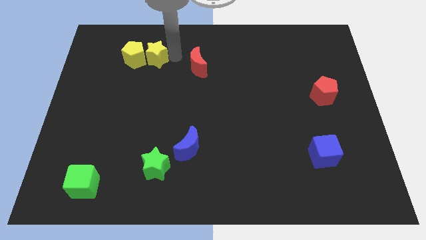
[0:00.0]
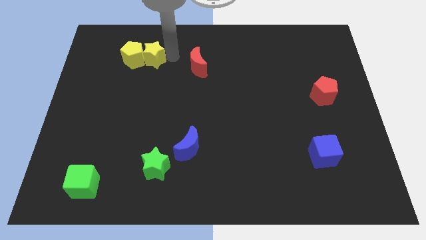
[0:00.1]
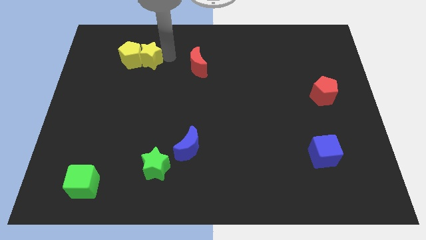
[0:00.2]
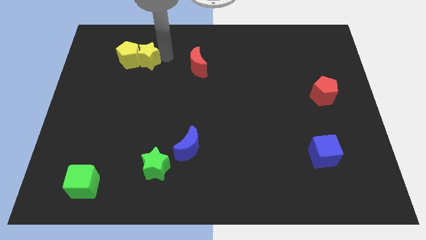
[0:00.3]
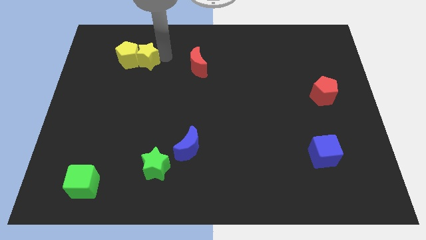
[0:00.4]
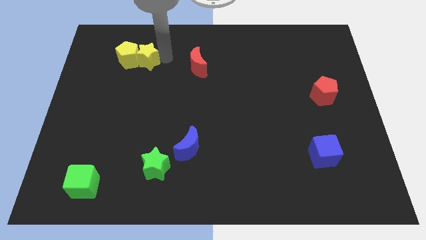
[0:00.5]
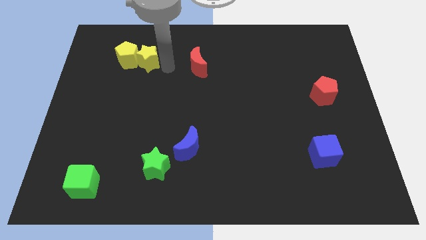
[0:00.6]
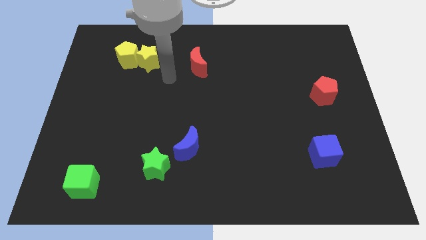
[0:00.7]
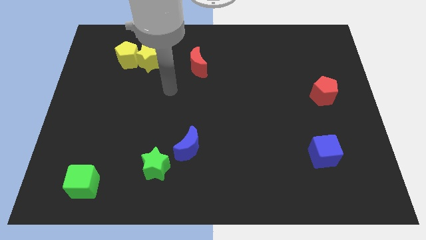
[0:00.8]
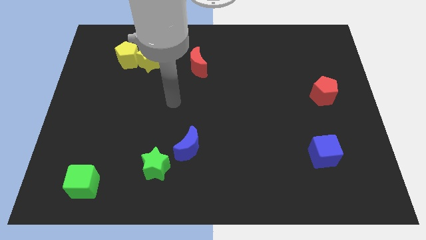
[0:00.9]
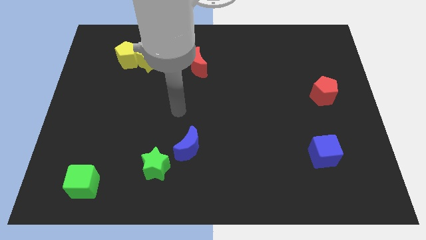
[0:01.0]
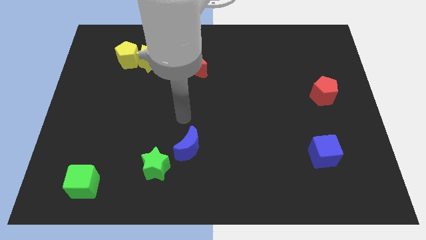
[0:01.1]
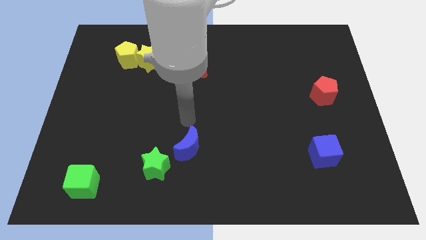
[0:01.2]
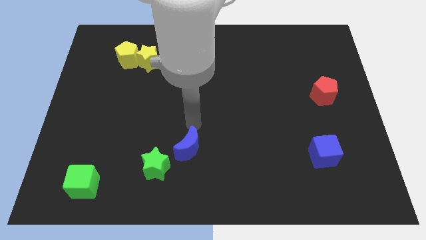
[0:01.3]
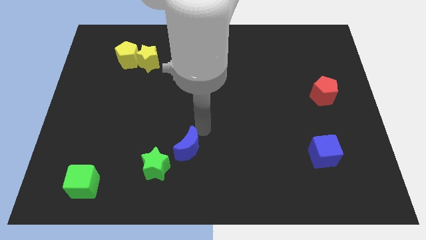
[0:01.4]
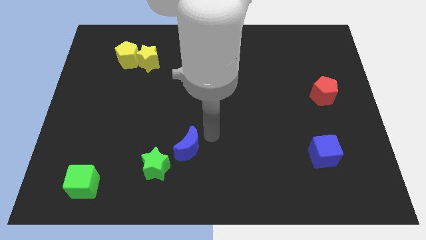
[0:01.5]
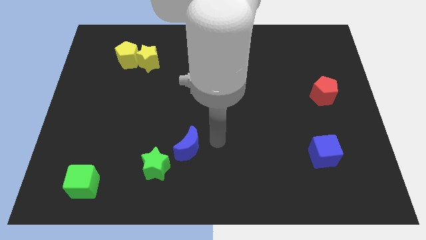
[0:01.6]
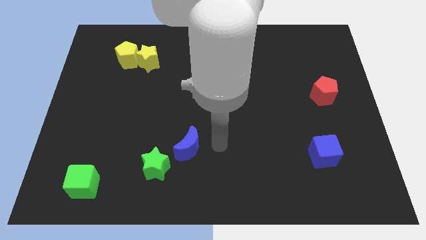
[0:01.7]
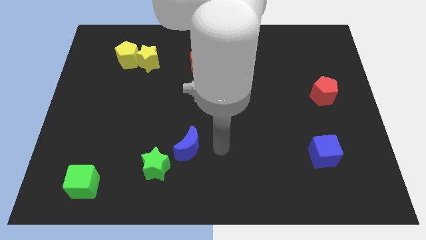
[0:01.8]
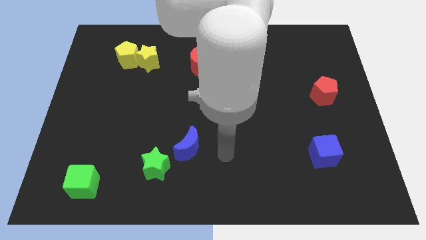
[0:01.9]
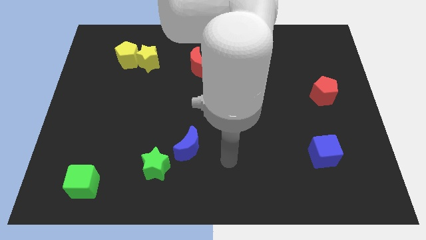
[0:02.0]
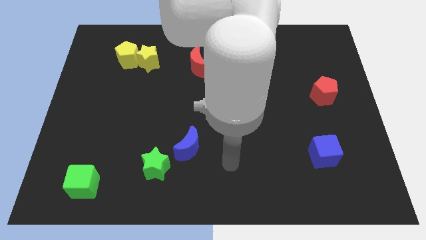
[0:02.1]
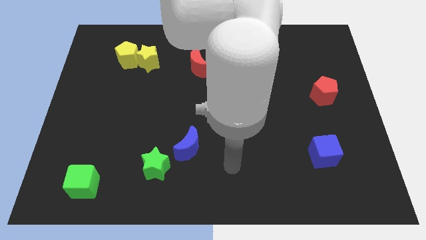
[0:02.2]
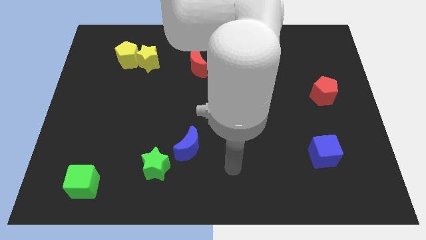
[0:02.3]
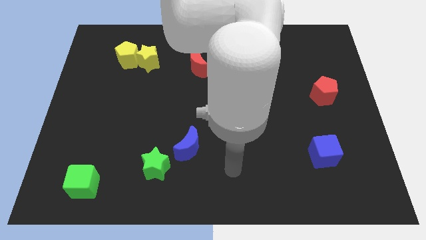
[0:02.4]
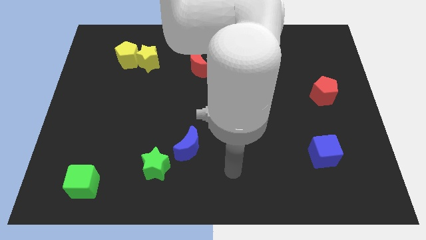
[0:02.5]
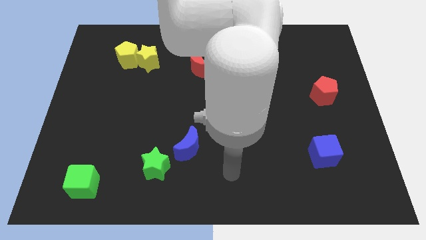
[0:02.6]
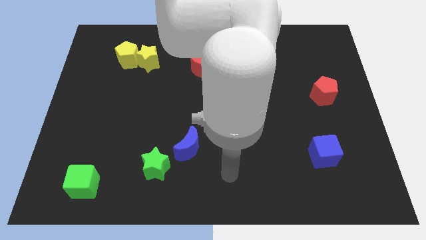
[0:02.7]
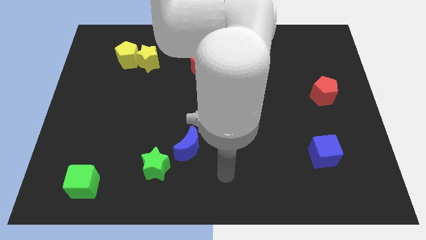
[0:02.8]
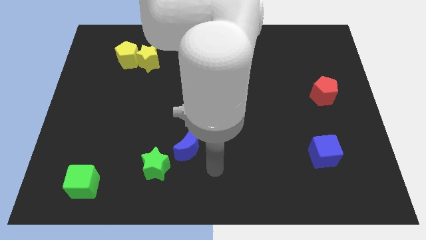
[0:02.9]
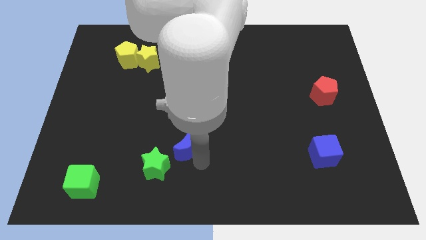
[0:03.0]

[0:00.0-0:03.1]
move the arm to the bottom of the blue crescent

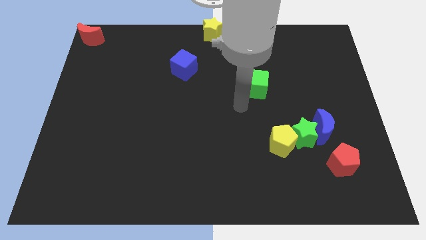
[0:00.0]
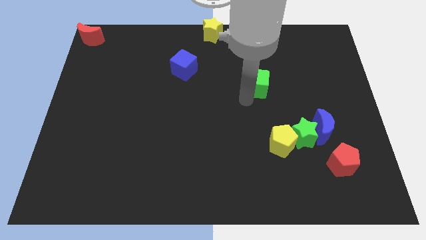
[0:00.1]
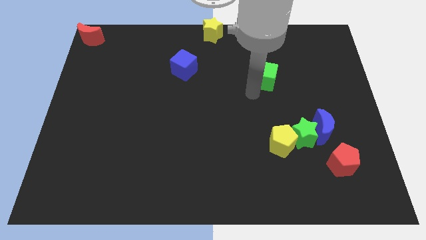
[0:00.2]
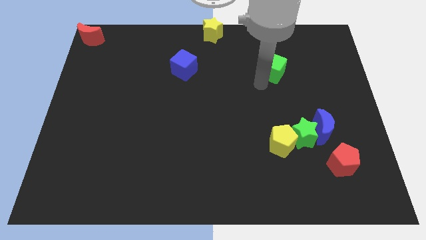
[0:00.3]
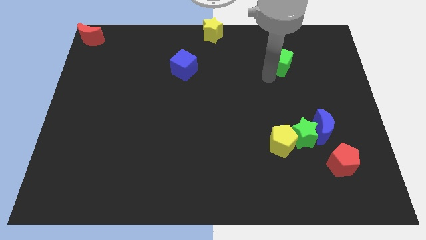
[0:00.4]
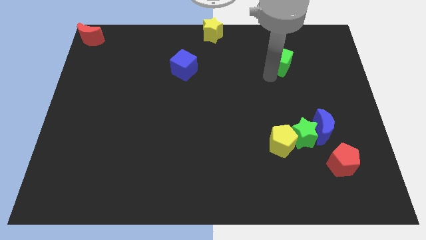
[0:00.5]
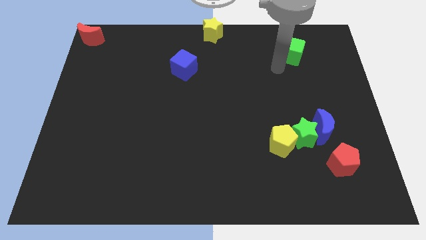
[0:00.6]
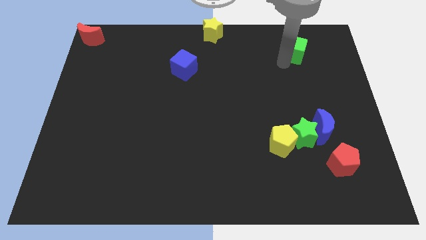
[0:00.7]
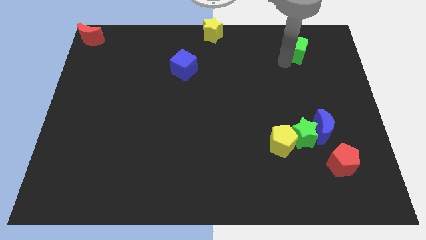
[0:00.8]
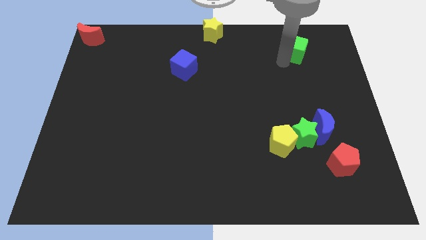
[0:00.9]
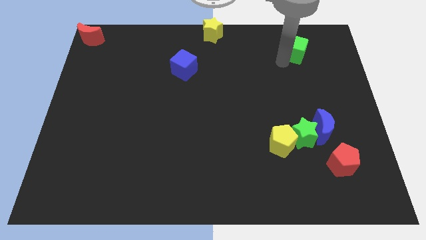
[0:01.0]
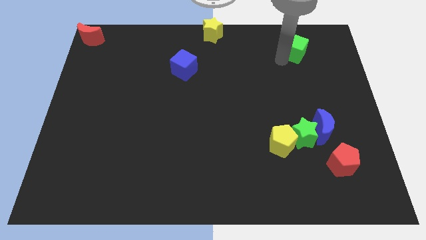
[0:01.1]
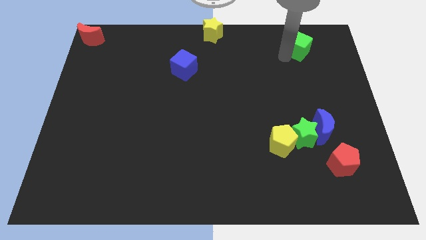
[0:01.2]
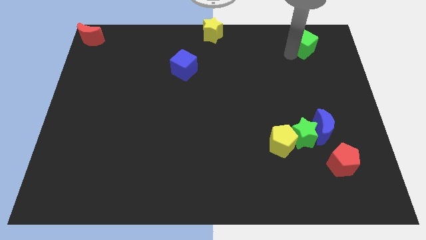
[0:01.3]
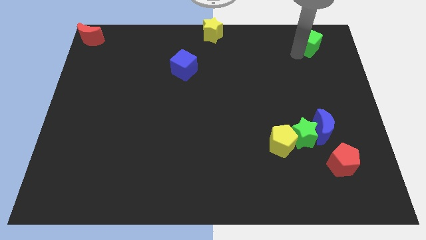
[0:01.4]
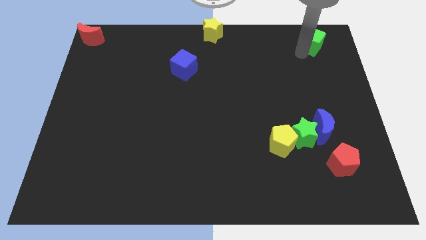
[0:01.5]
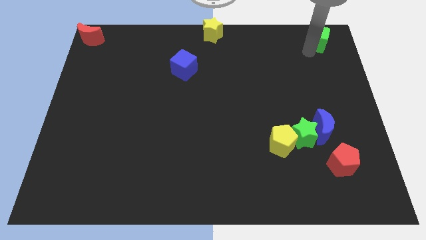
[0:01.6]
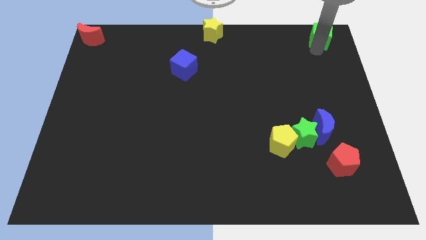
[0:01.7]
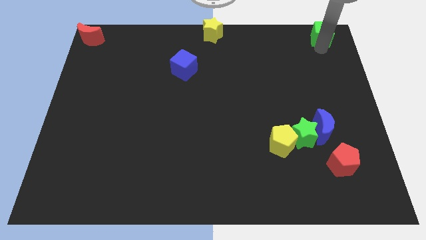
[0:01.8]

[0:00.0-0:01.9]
move green cube to the top right corner of the board

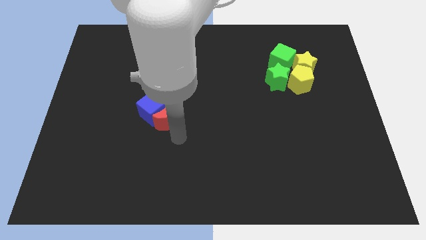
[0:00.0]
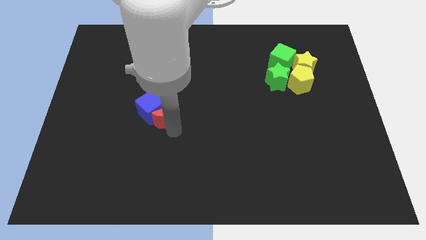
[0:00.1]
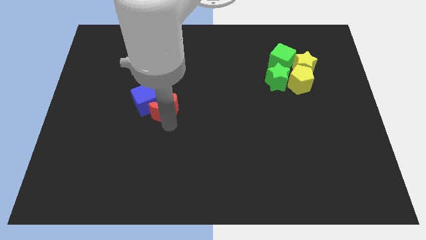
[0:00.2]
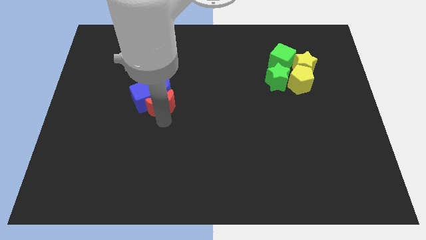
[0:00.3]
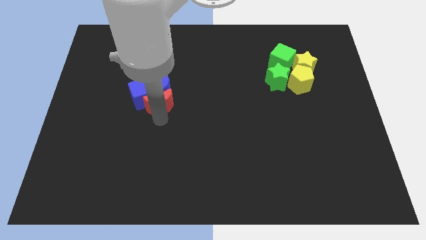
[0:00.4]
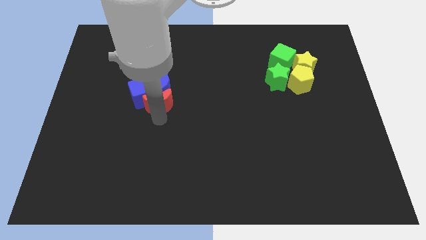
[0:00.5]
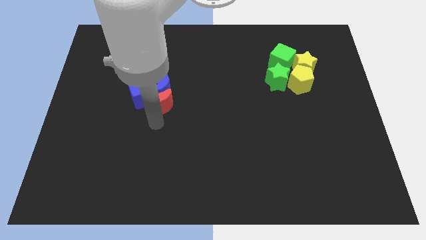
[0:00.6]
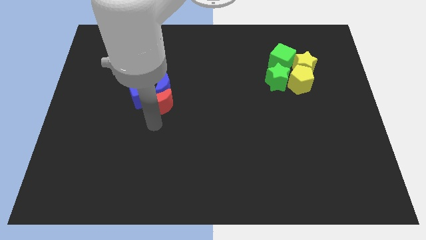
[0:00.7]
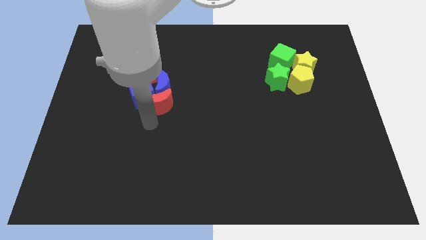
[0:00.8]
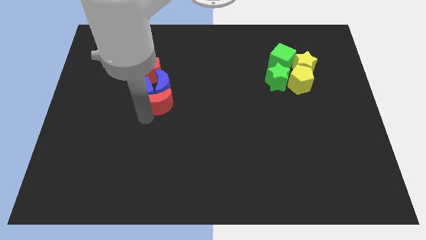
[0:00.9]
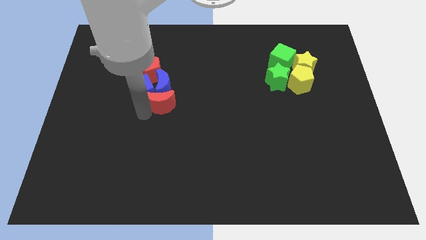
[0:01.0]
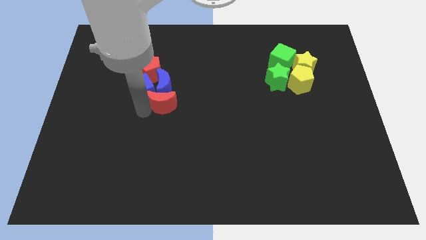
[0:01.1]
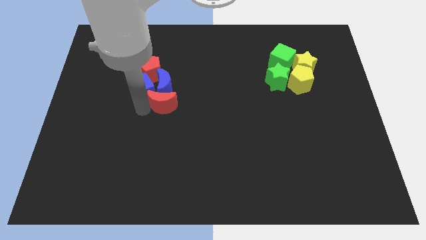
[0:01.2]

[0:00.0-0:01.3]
move the red and blue blocks upwards

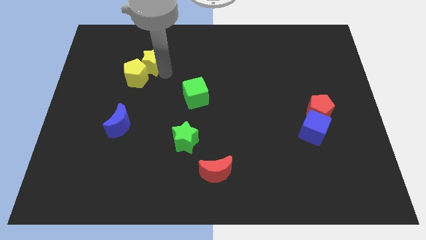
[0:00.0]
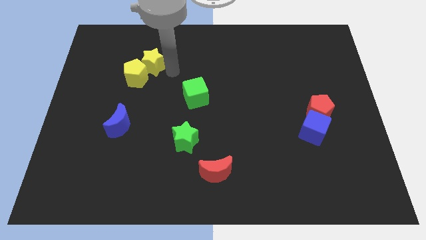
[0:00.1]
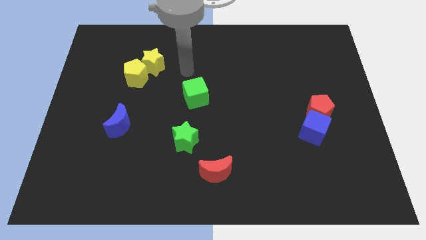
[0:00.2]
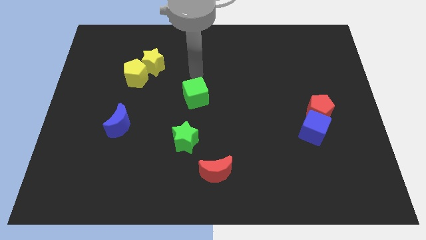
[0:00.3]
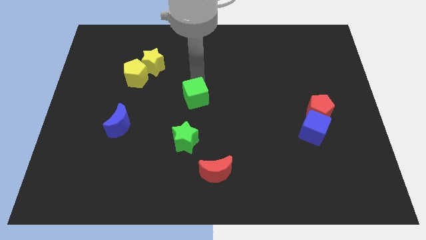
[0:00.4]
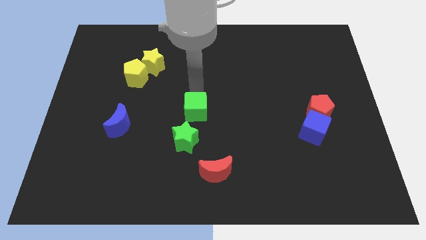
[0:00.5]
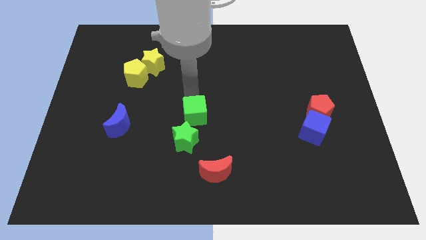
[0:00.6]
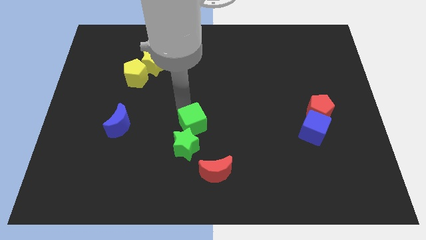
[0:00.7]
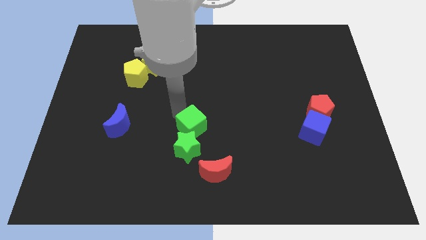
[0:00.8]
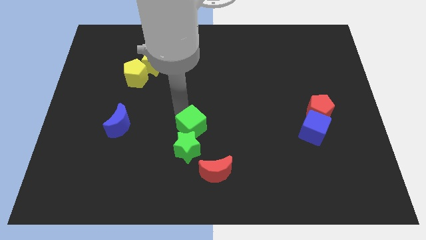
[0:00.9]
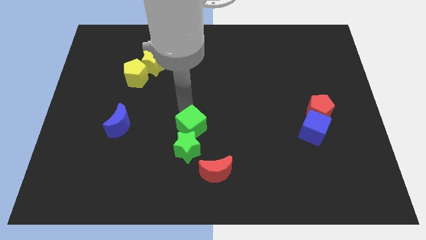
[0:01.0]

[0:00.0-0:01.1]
push the green blocks towards the bottom side of the board

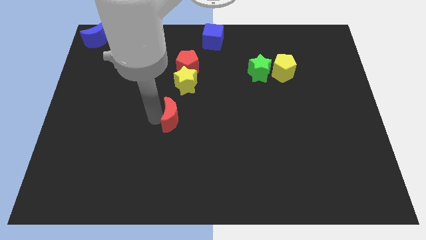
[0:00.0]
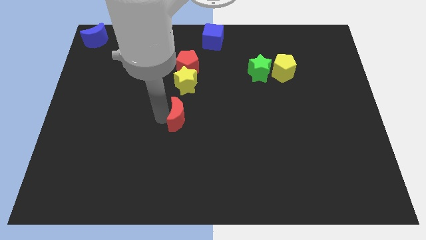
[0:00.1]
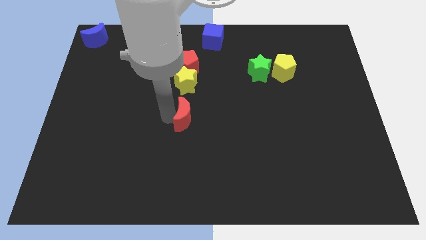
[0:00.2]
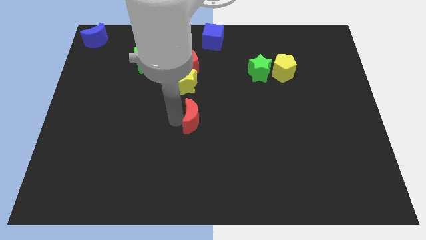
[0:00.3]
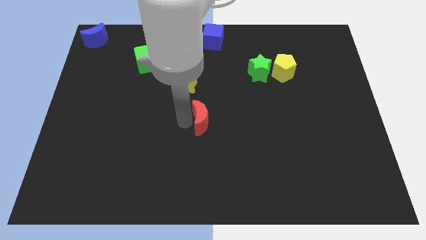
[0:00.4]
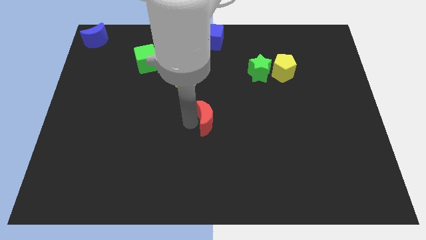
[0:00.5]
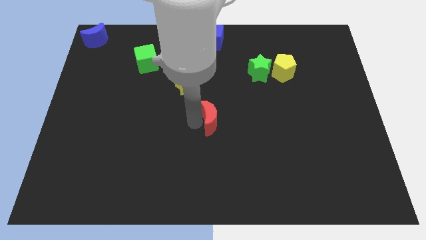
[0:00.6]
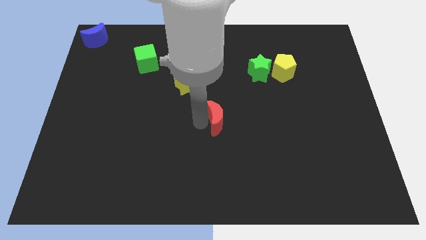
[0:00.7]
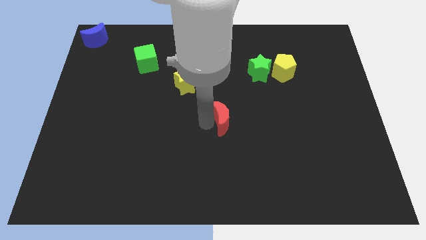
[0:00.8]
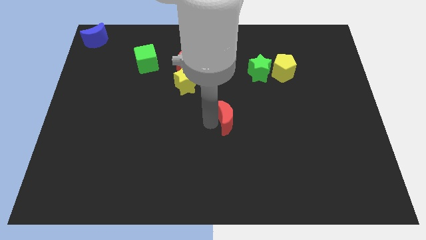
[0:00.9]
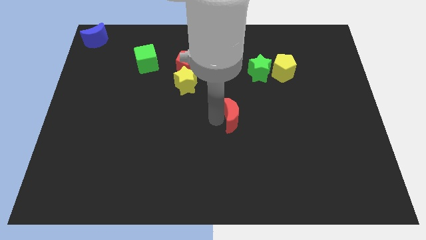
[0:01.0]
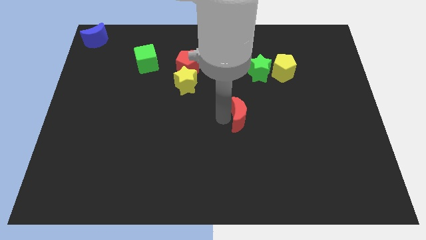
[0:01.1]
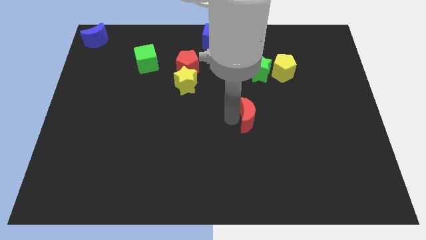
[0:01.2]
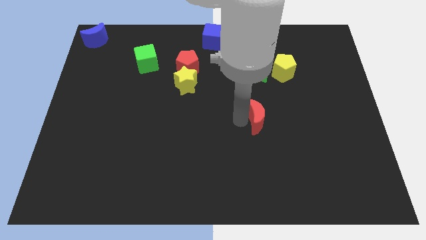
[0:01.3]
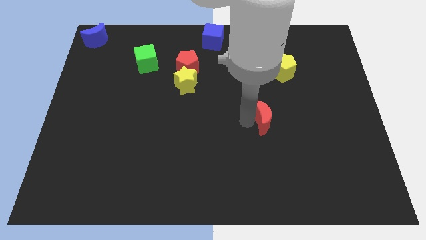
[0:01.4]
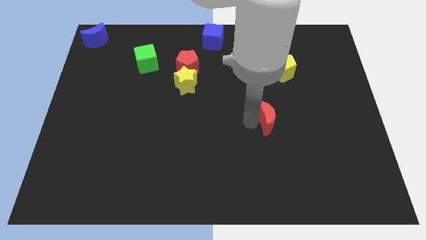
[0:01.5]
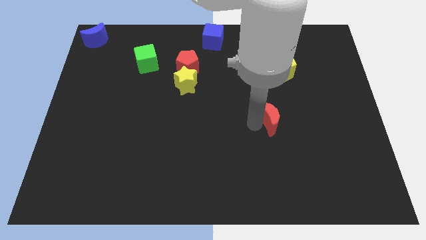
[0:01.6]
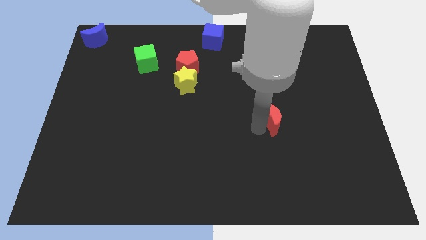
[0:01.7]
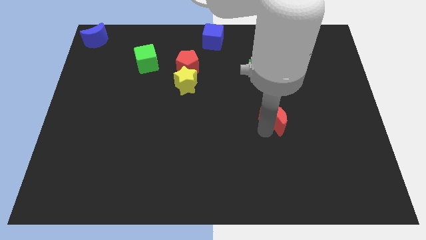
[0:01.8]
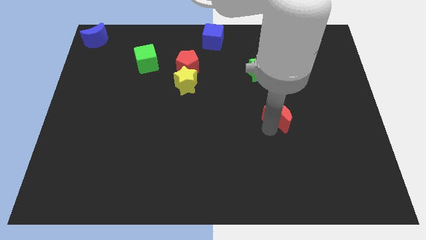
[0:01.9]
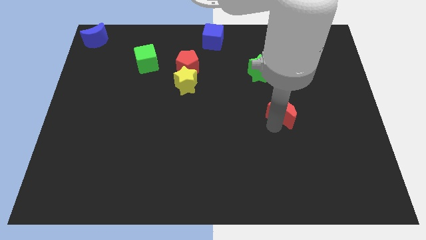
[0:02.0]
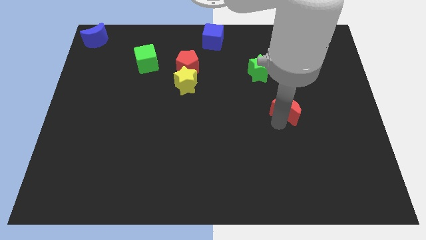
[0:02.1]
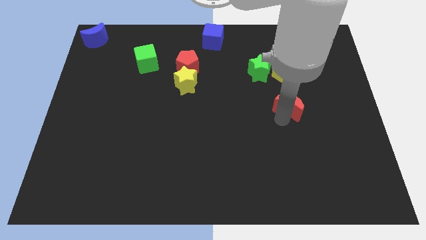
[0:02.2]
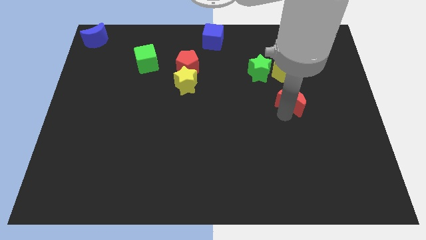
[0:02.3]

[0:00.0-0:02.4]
push the red crescent below the yellow pentagon
